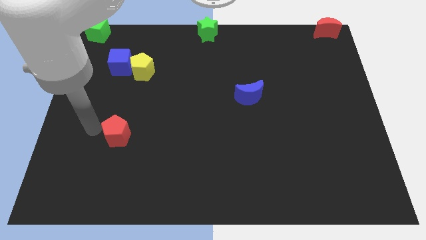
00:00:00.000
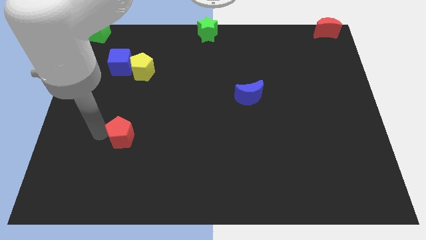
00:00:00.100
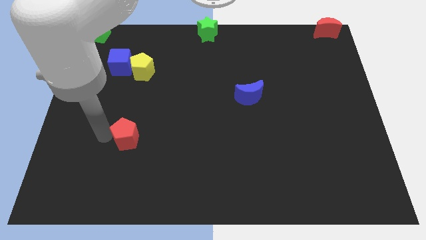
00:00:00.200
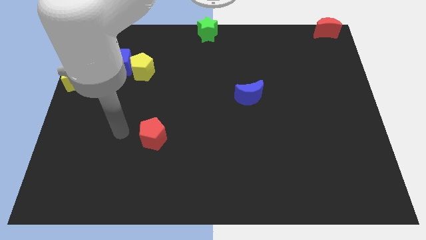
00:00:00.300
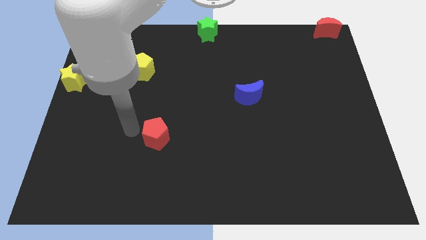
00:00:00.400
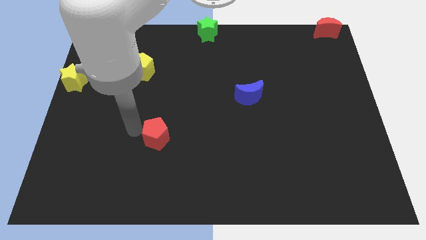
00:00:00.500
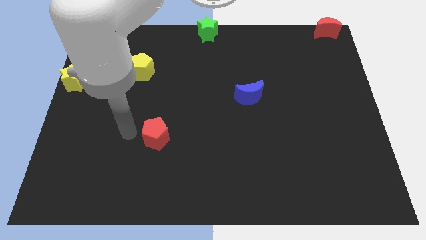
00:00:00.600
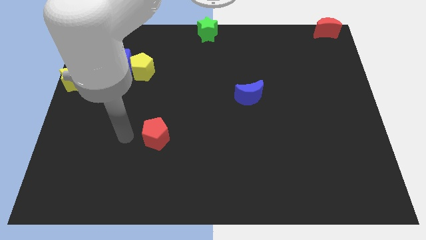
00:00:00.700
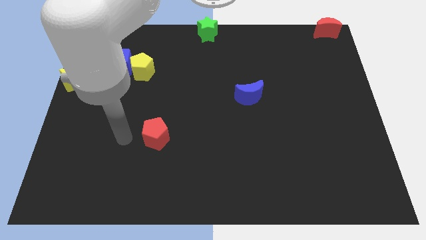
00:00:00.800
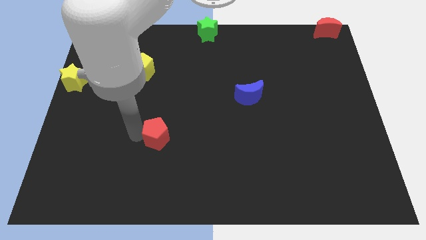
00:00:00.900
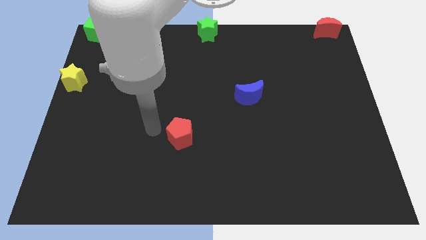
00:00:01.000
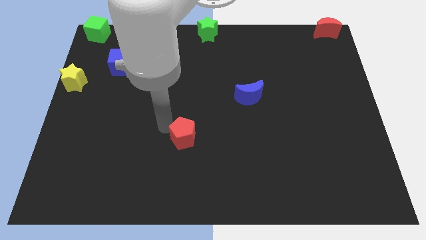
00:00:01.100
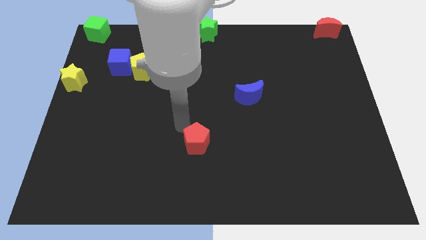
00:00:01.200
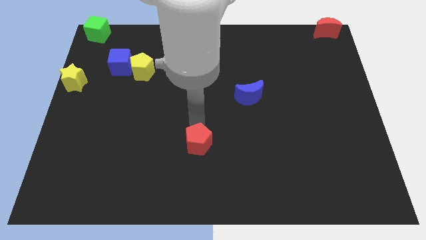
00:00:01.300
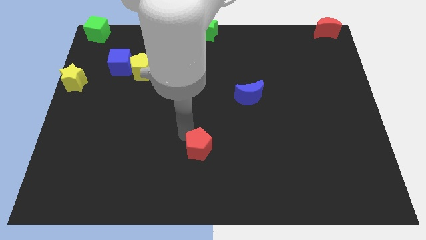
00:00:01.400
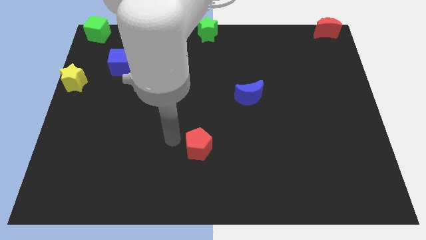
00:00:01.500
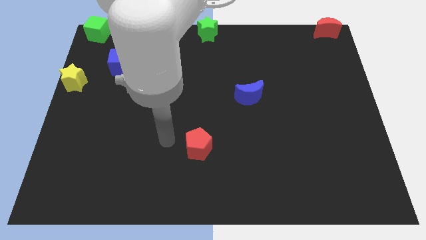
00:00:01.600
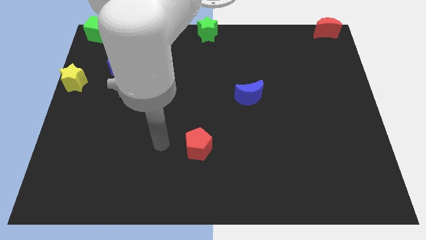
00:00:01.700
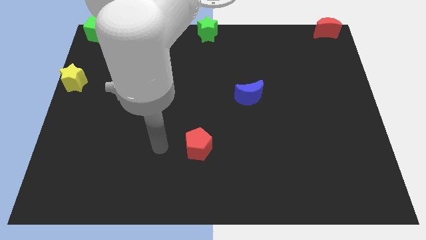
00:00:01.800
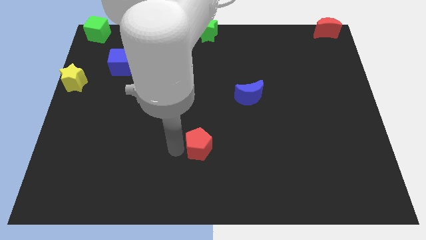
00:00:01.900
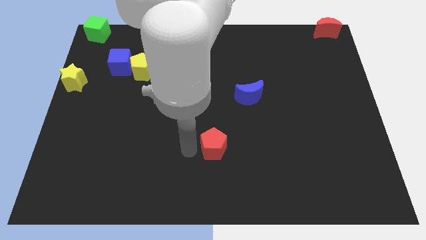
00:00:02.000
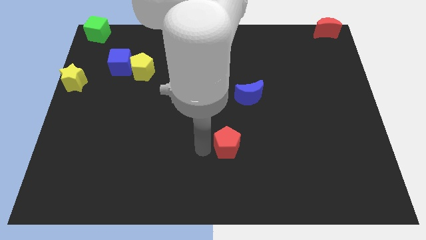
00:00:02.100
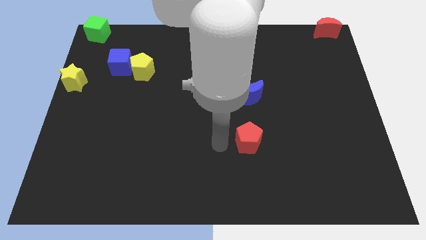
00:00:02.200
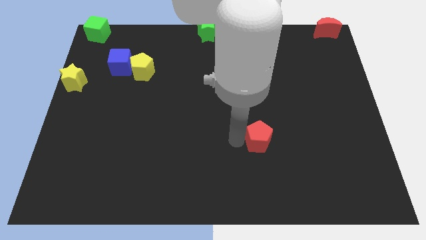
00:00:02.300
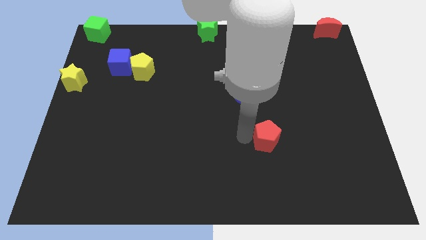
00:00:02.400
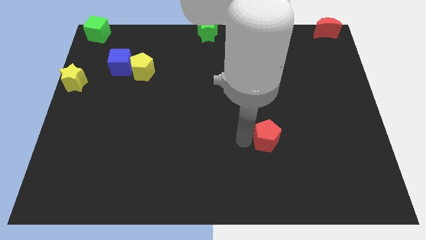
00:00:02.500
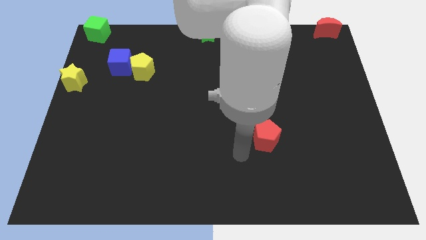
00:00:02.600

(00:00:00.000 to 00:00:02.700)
push red pentagon below blue crescent

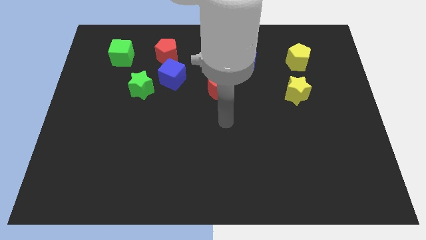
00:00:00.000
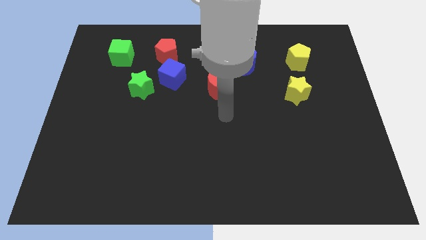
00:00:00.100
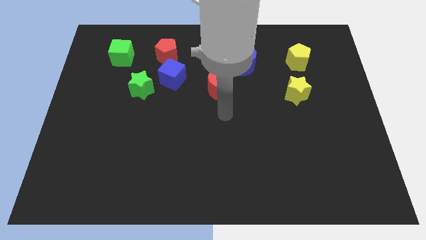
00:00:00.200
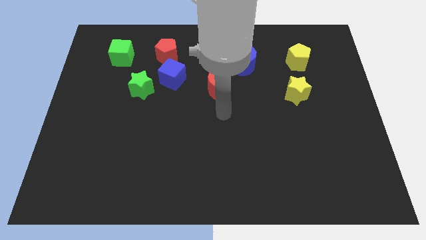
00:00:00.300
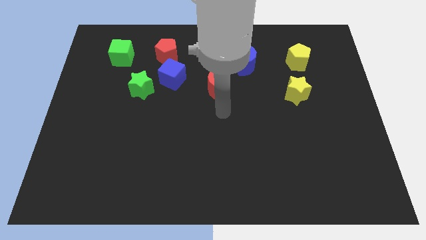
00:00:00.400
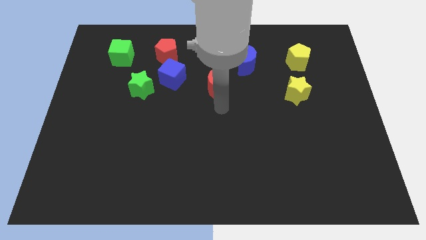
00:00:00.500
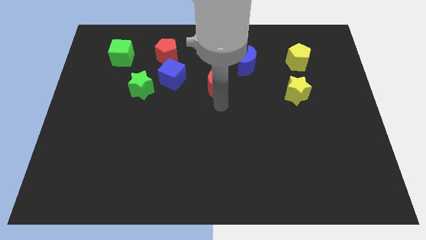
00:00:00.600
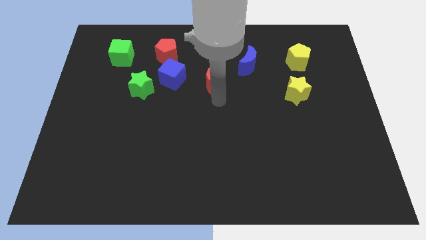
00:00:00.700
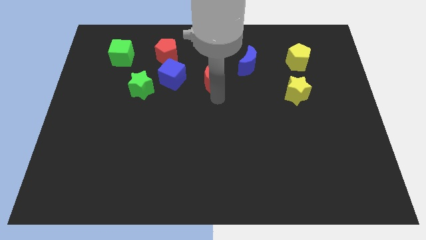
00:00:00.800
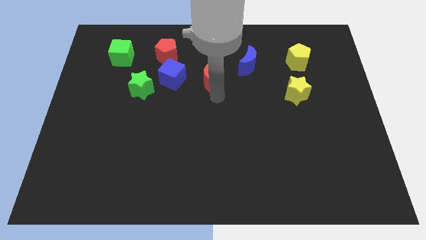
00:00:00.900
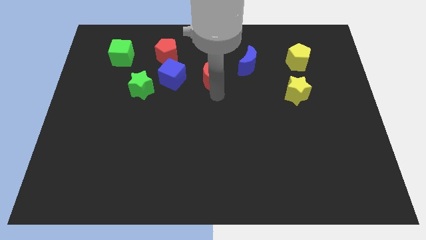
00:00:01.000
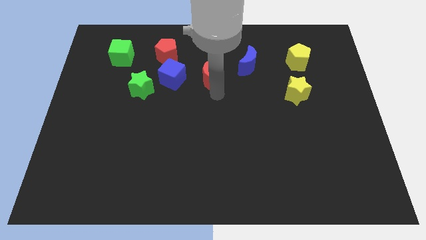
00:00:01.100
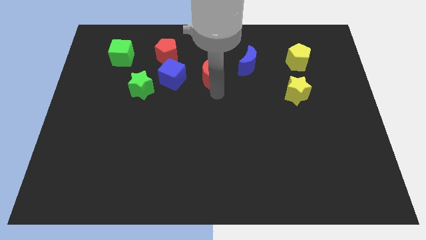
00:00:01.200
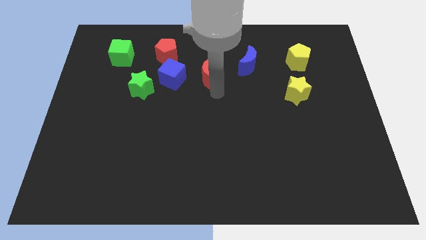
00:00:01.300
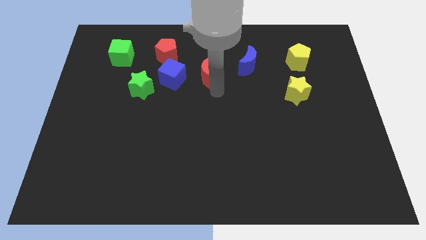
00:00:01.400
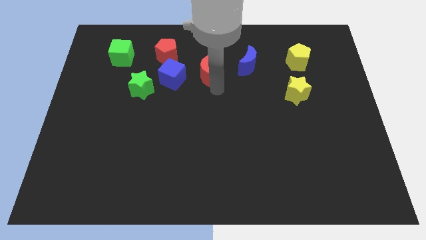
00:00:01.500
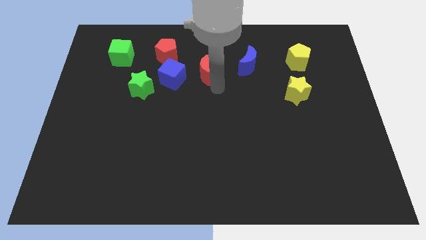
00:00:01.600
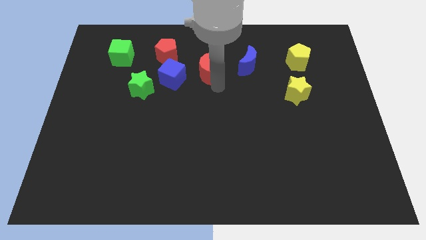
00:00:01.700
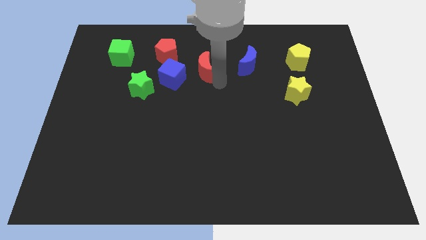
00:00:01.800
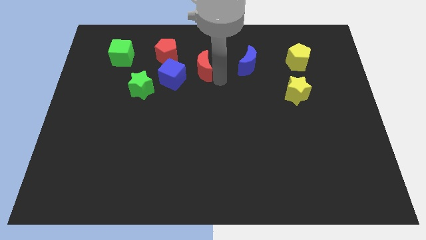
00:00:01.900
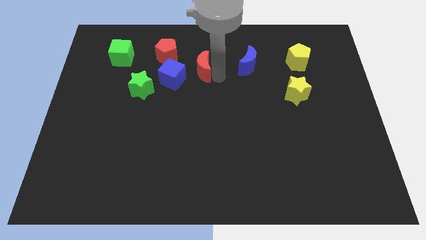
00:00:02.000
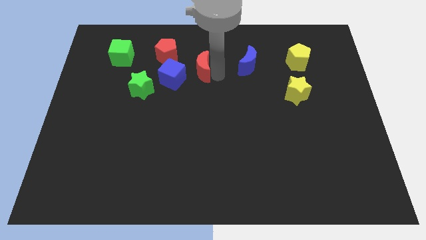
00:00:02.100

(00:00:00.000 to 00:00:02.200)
push the red moon towards the top center of the board

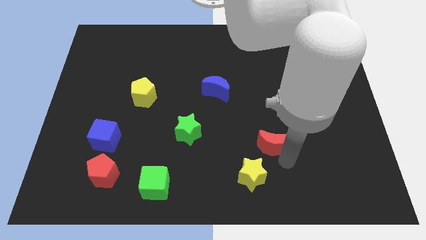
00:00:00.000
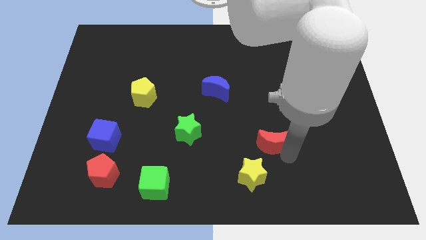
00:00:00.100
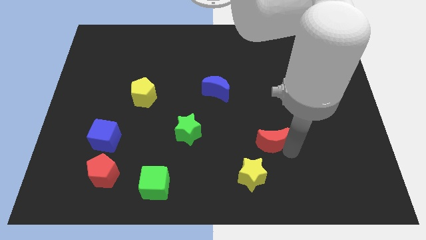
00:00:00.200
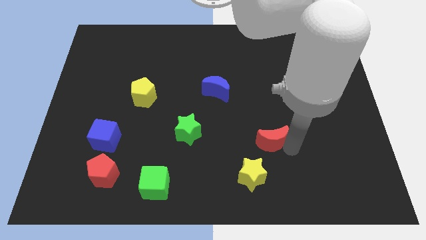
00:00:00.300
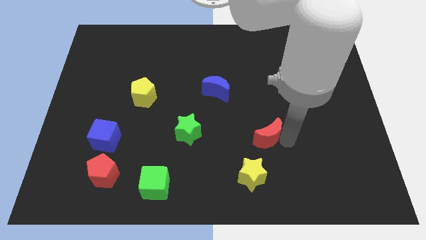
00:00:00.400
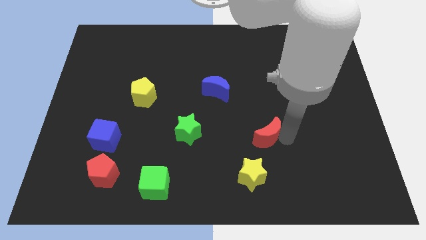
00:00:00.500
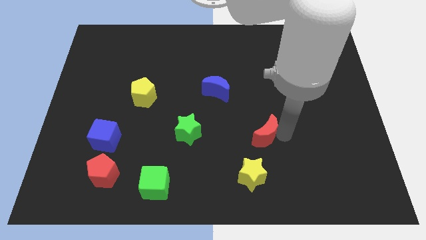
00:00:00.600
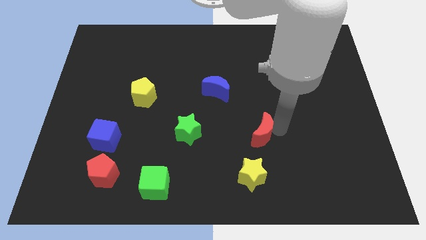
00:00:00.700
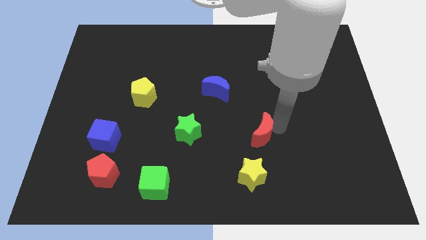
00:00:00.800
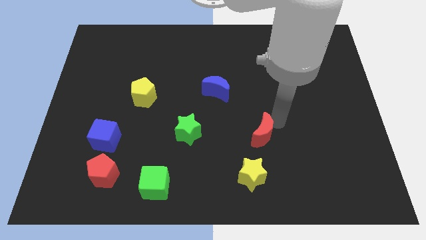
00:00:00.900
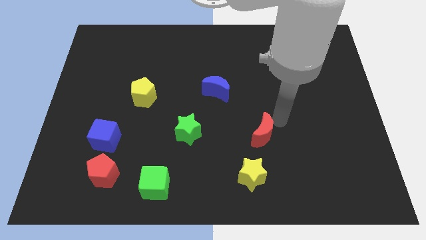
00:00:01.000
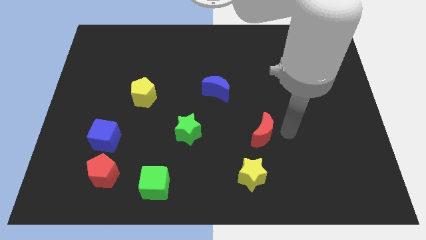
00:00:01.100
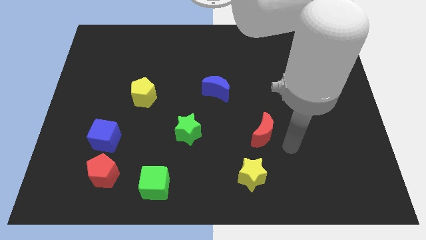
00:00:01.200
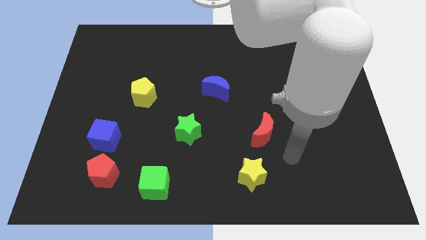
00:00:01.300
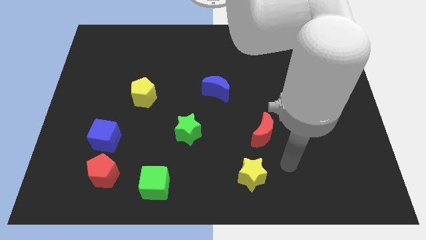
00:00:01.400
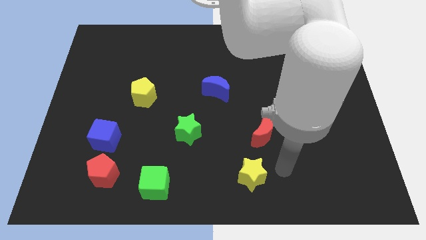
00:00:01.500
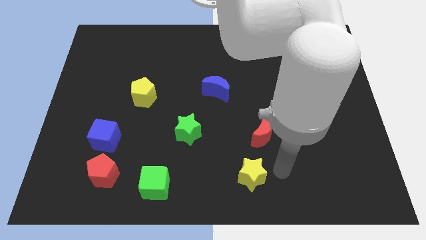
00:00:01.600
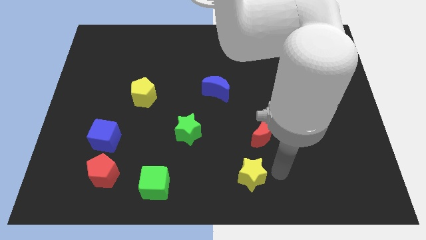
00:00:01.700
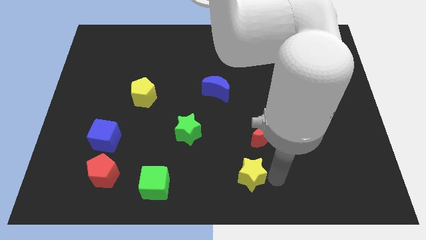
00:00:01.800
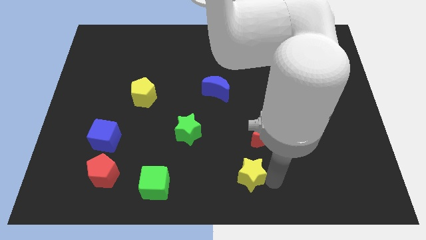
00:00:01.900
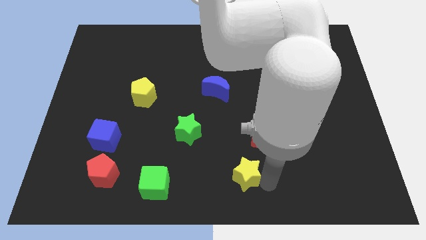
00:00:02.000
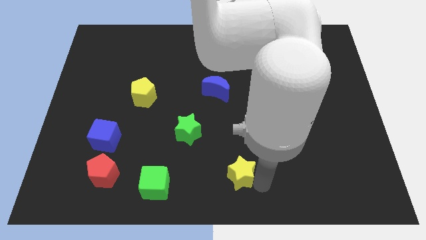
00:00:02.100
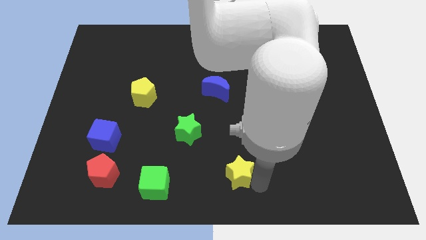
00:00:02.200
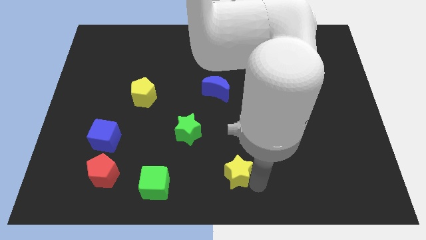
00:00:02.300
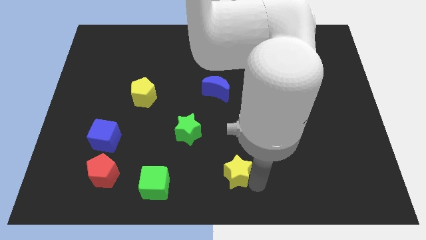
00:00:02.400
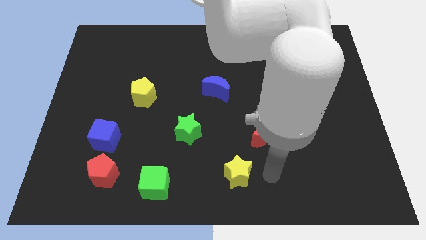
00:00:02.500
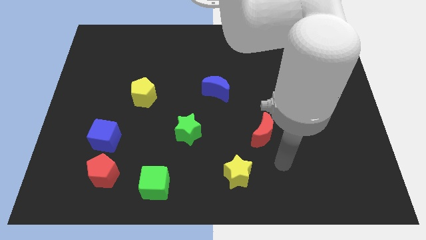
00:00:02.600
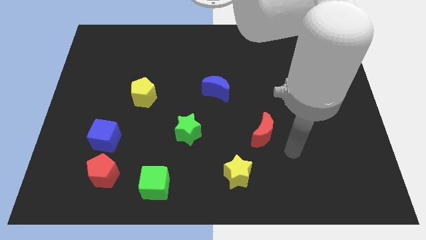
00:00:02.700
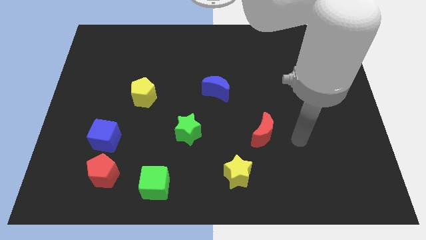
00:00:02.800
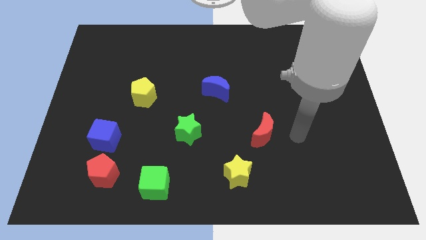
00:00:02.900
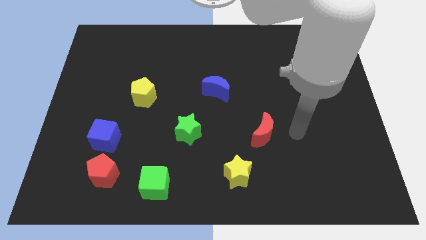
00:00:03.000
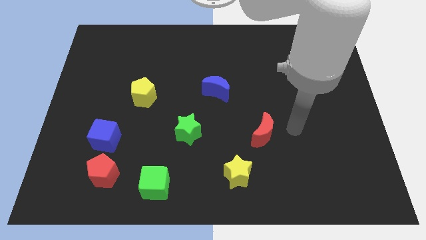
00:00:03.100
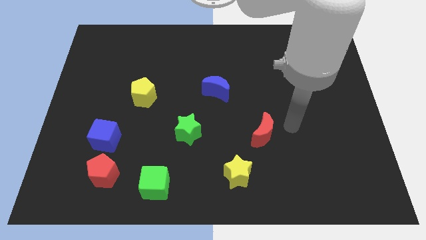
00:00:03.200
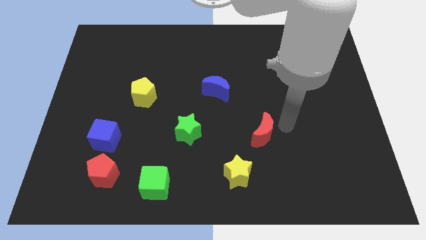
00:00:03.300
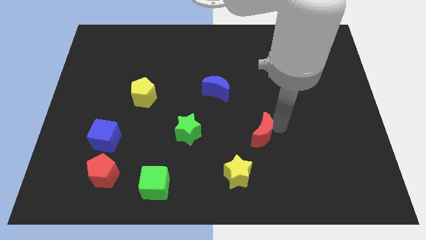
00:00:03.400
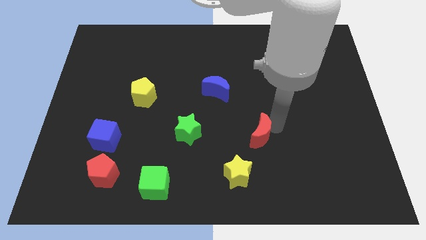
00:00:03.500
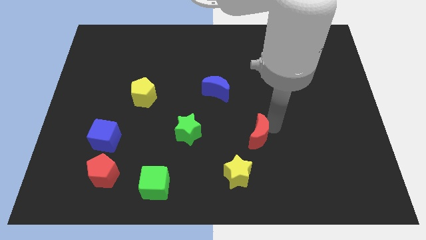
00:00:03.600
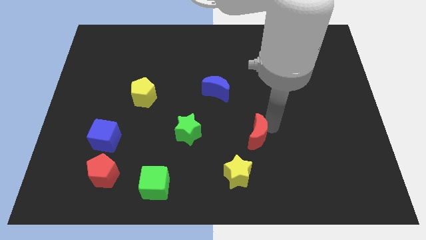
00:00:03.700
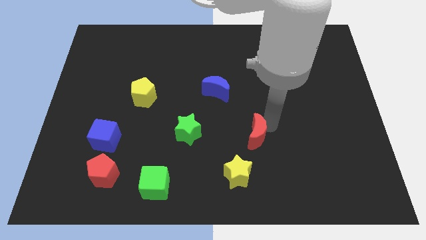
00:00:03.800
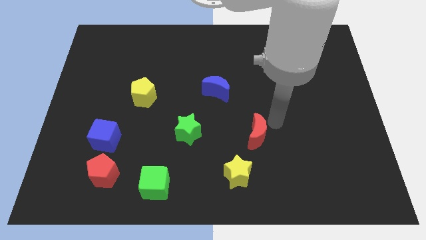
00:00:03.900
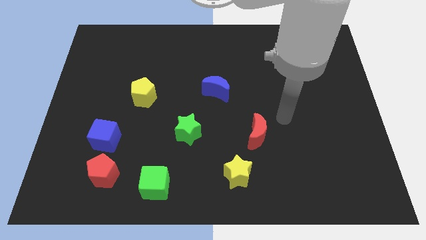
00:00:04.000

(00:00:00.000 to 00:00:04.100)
adjust the red moon and yellow star to form a triangle with the green star
